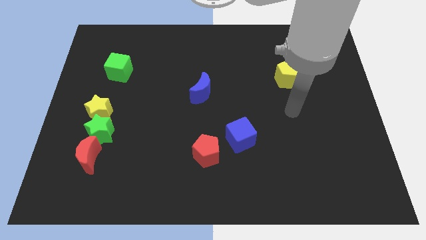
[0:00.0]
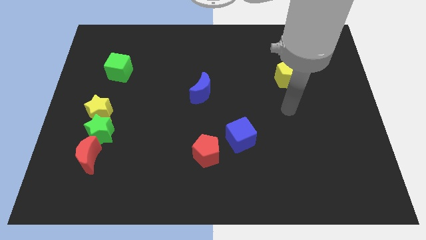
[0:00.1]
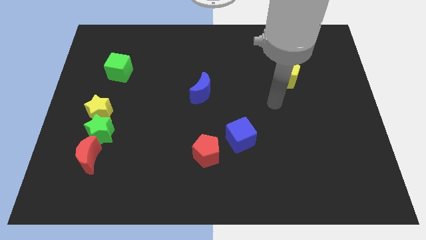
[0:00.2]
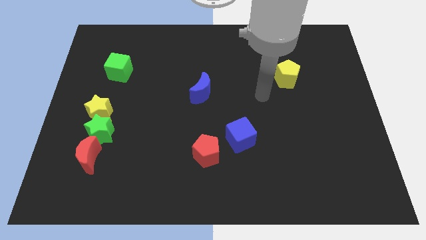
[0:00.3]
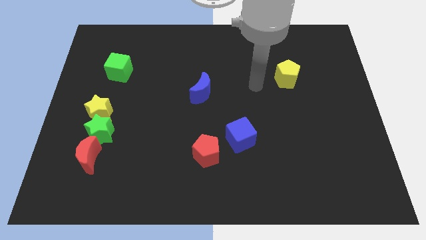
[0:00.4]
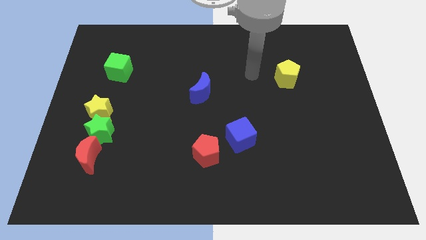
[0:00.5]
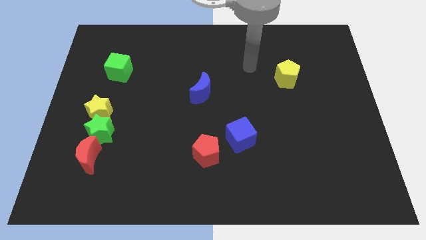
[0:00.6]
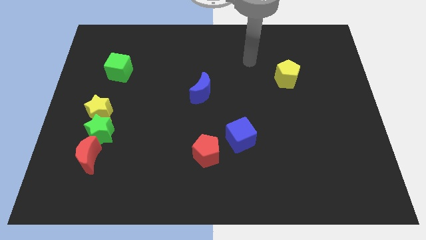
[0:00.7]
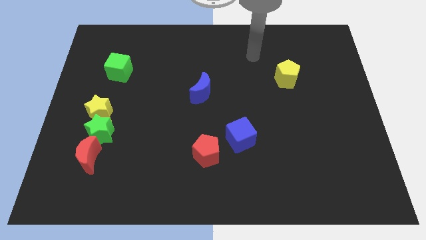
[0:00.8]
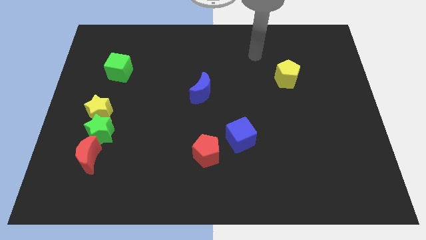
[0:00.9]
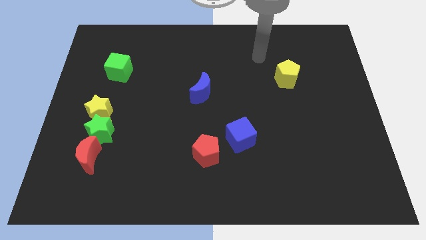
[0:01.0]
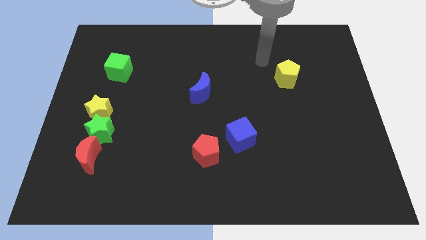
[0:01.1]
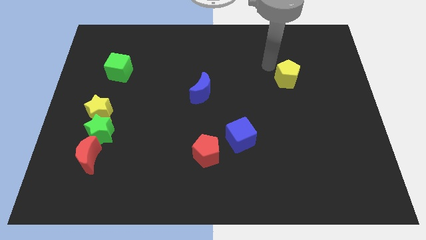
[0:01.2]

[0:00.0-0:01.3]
place your arm to the top left yellow pentagon

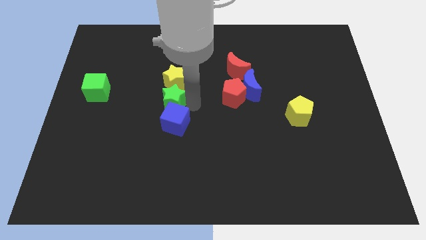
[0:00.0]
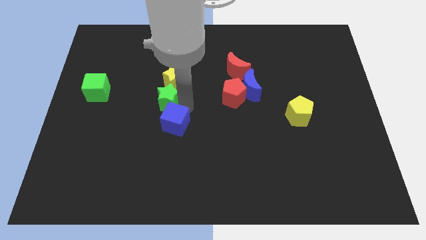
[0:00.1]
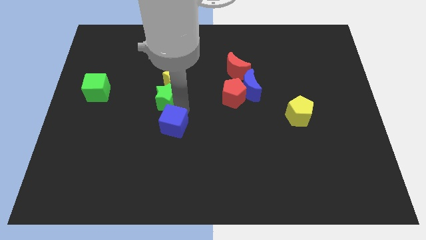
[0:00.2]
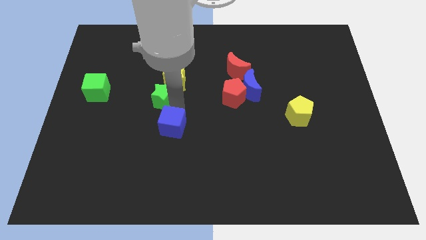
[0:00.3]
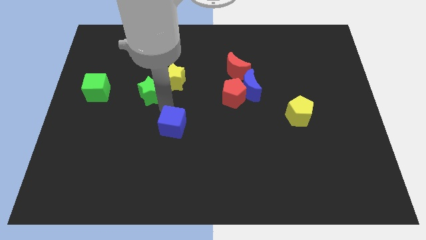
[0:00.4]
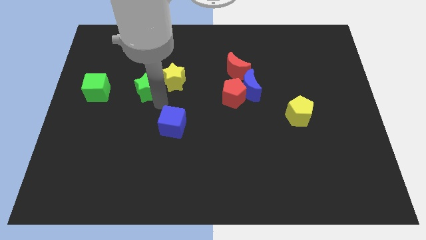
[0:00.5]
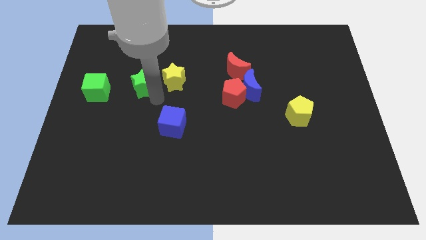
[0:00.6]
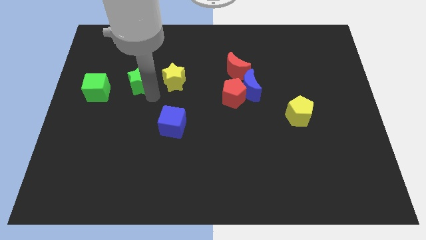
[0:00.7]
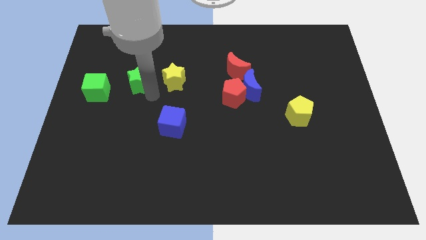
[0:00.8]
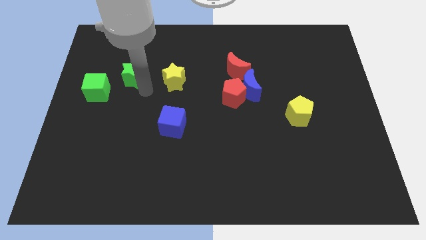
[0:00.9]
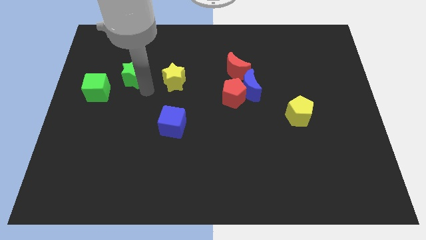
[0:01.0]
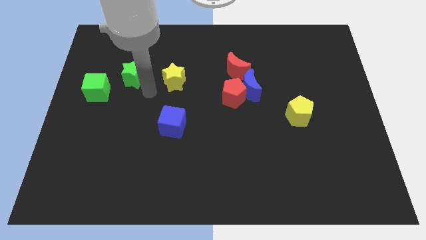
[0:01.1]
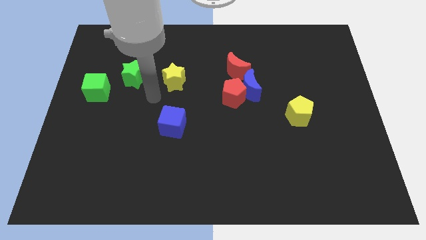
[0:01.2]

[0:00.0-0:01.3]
place the green star to the left of the yellow star

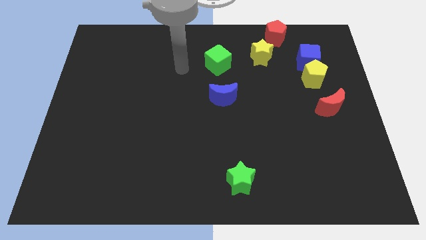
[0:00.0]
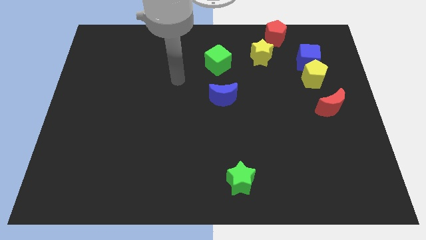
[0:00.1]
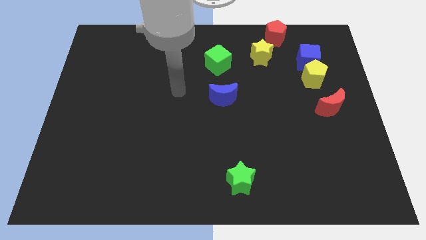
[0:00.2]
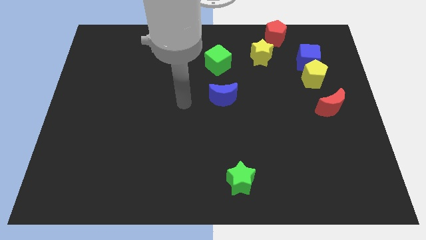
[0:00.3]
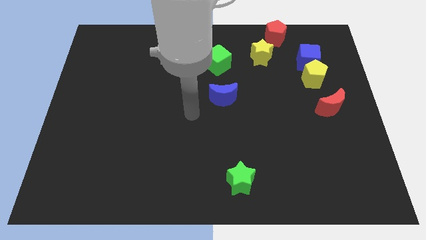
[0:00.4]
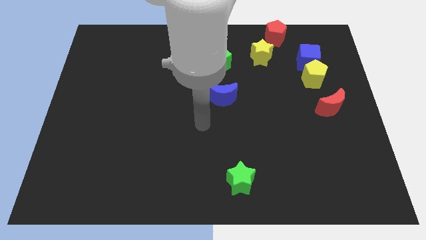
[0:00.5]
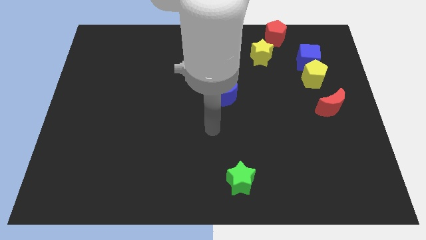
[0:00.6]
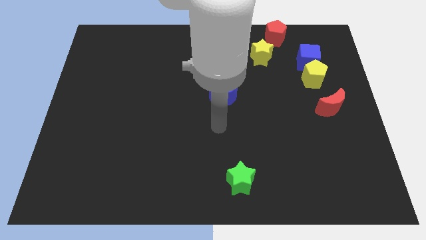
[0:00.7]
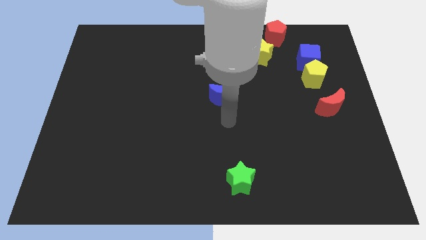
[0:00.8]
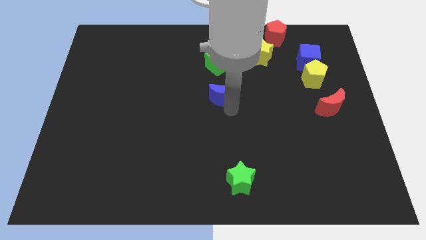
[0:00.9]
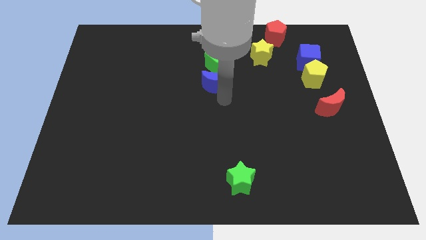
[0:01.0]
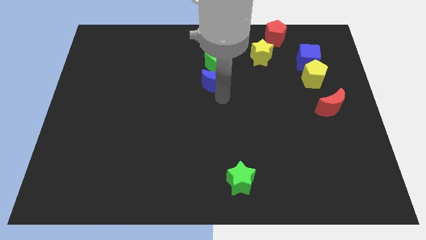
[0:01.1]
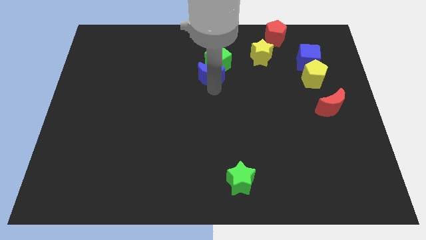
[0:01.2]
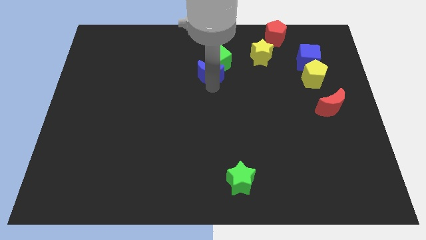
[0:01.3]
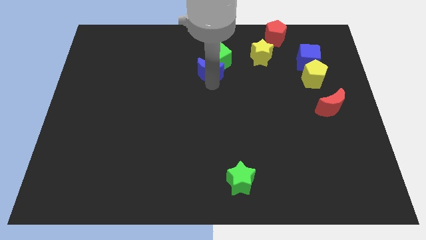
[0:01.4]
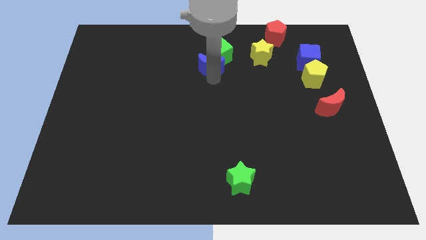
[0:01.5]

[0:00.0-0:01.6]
put the blue semicircle into the green cube

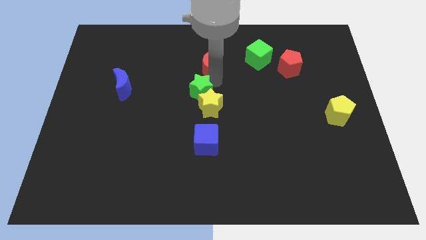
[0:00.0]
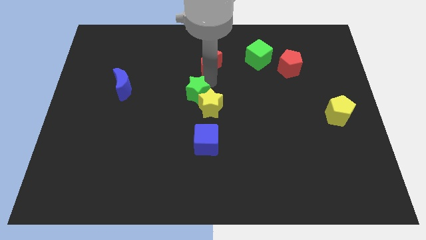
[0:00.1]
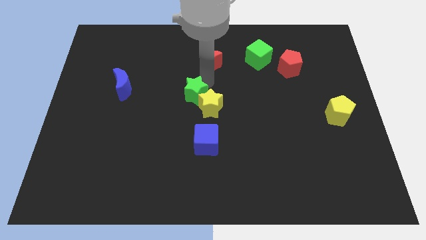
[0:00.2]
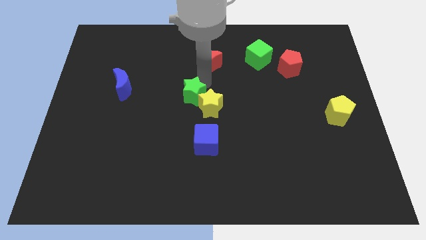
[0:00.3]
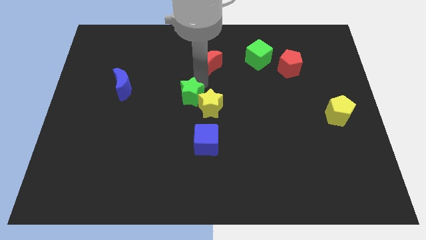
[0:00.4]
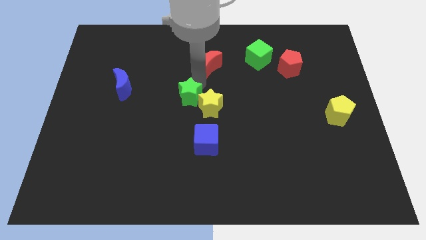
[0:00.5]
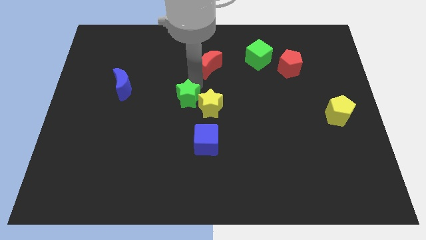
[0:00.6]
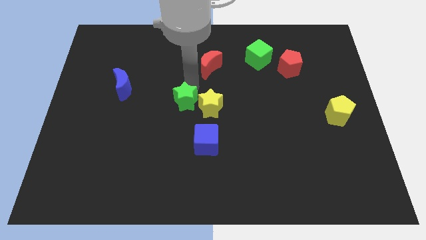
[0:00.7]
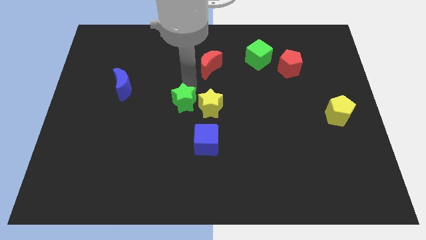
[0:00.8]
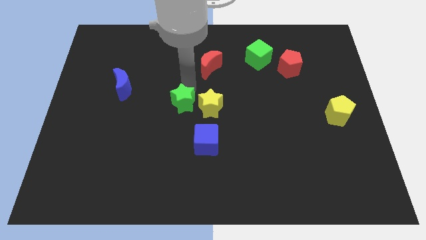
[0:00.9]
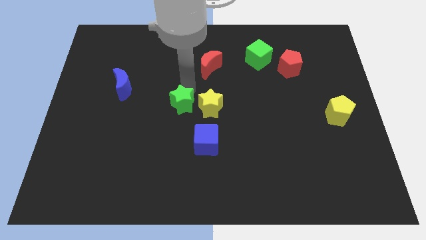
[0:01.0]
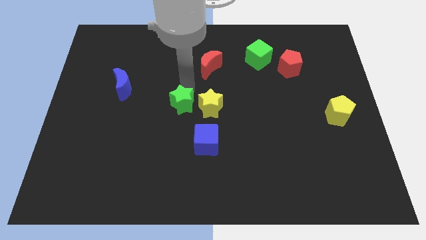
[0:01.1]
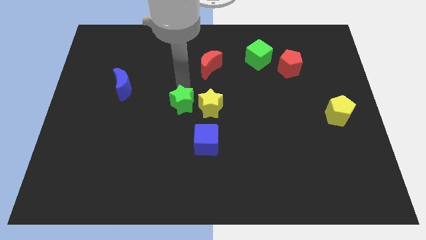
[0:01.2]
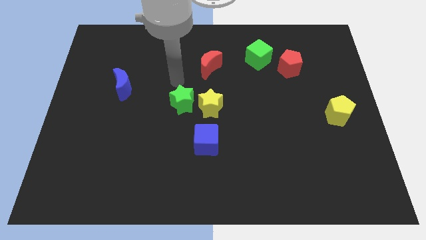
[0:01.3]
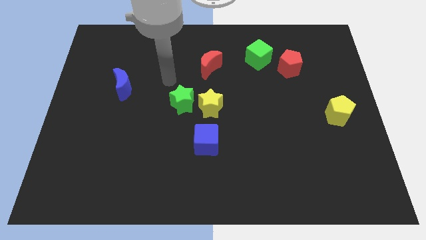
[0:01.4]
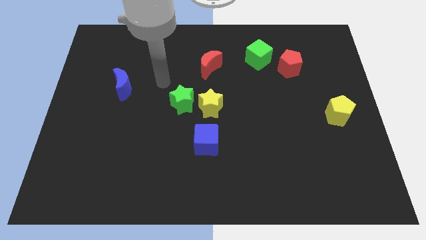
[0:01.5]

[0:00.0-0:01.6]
separate green star from yellow star

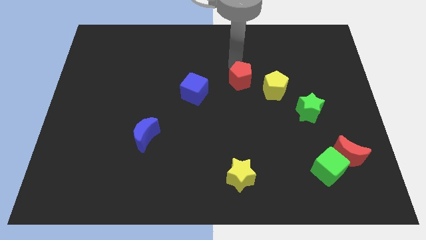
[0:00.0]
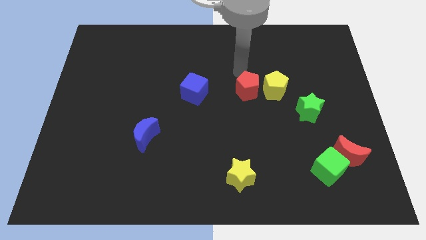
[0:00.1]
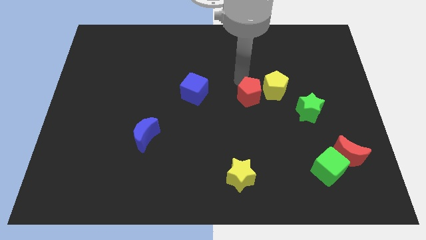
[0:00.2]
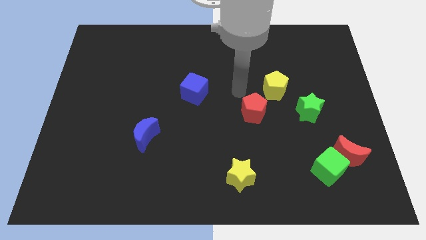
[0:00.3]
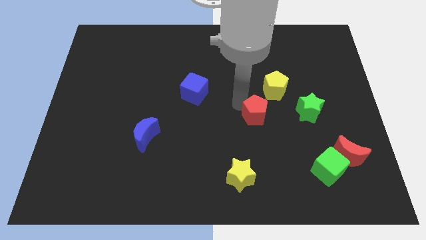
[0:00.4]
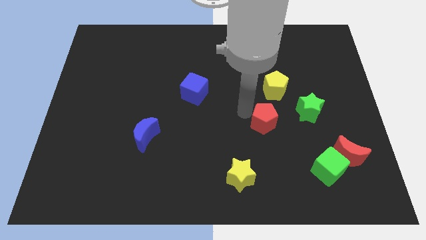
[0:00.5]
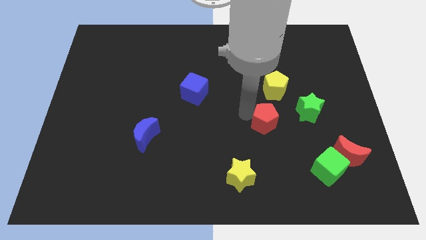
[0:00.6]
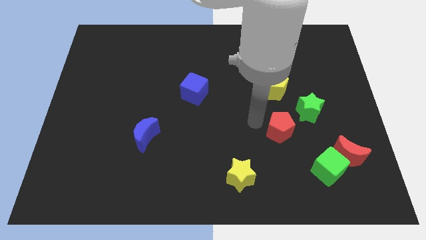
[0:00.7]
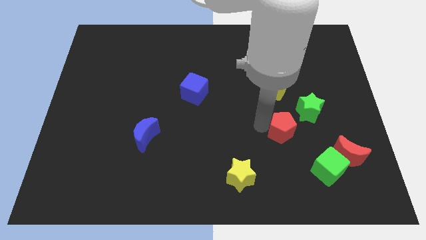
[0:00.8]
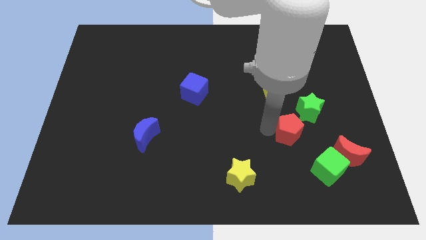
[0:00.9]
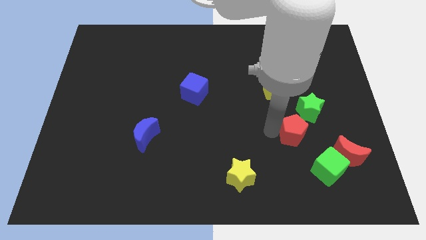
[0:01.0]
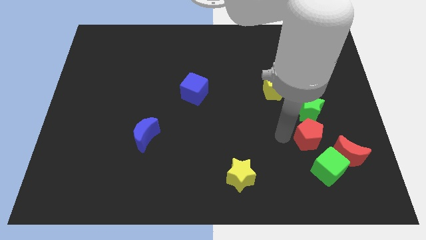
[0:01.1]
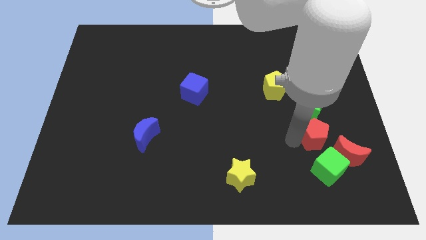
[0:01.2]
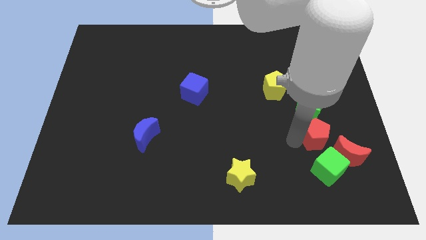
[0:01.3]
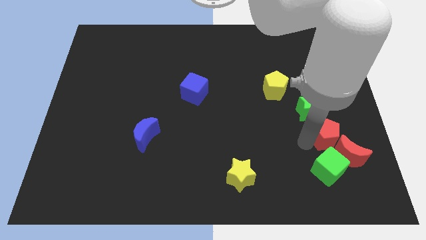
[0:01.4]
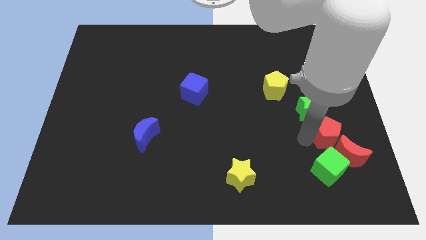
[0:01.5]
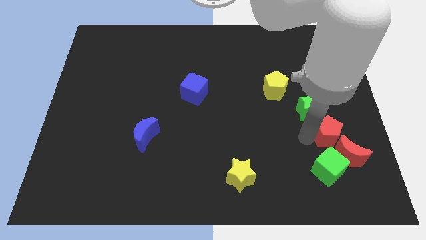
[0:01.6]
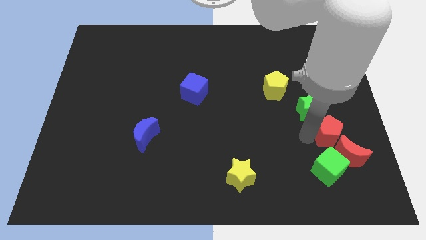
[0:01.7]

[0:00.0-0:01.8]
move the red pentagon into the red crescent

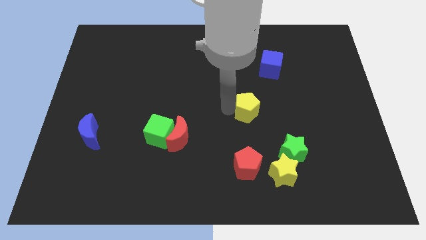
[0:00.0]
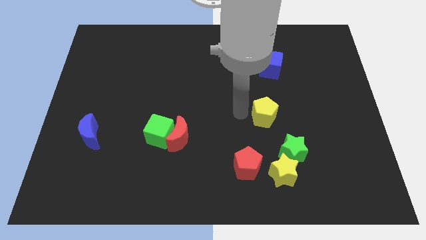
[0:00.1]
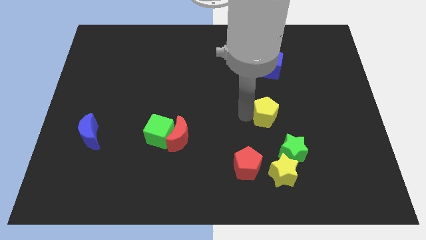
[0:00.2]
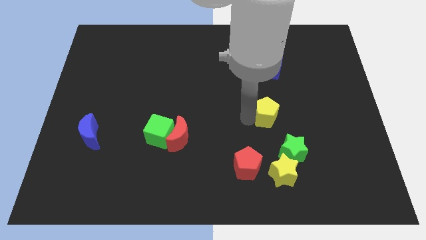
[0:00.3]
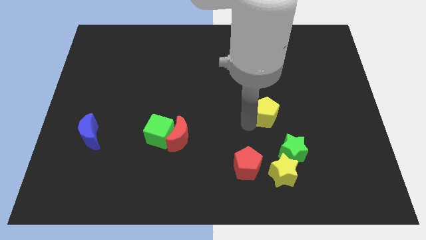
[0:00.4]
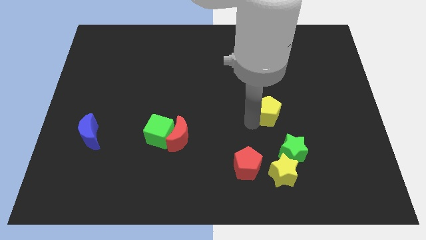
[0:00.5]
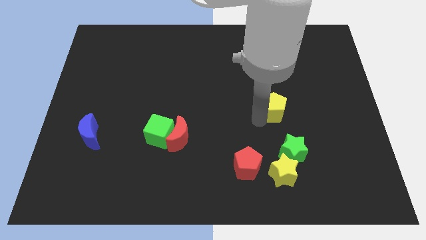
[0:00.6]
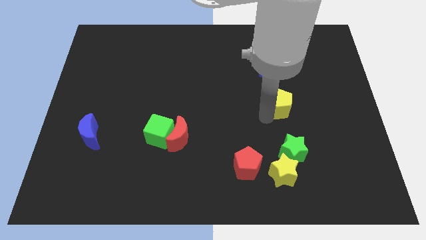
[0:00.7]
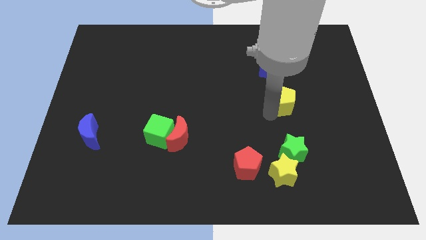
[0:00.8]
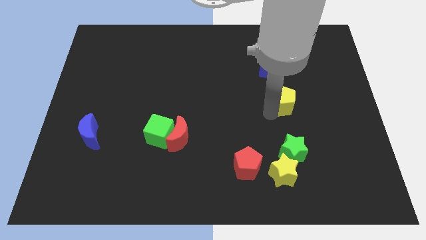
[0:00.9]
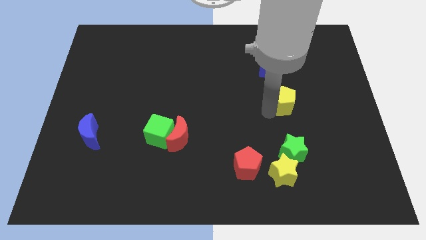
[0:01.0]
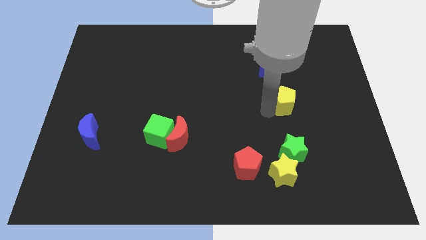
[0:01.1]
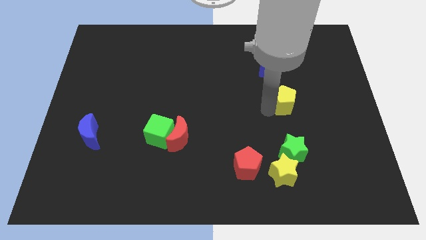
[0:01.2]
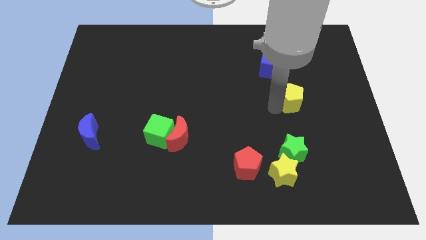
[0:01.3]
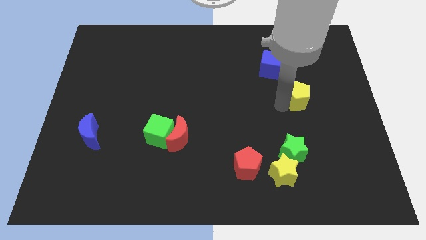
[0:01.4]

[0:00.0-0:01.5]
move the yellow pentagon on the top side of the green star
